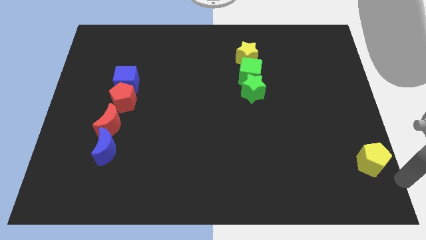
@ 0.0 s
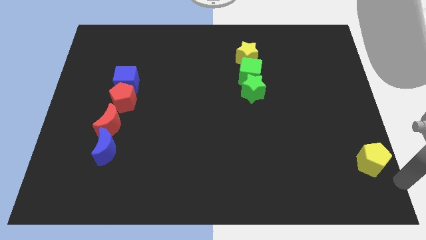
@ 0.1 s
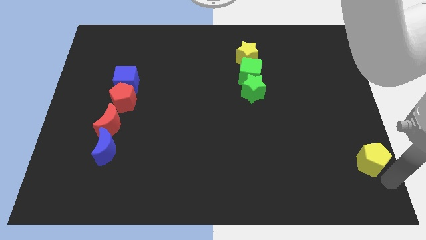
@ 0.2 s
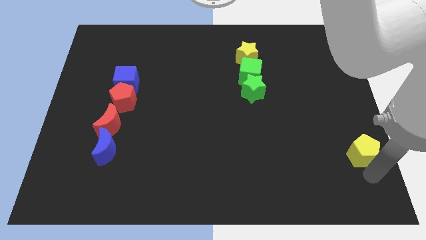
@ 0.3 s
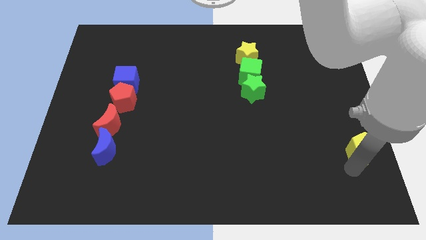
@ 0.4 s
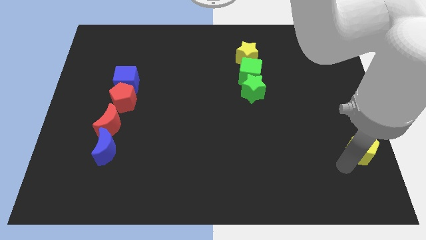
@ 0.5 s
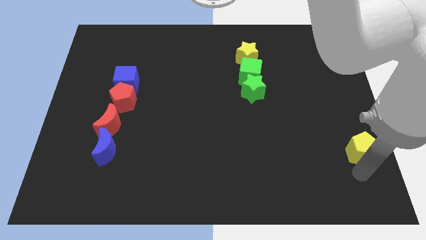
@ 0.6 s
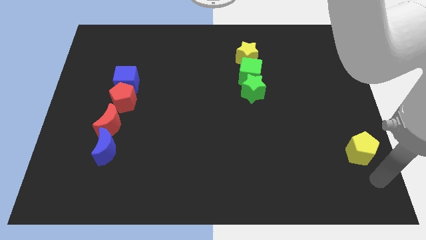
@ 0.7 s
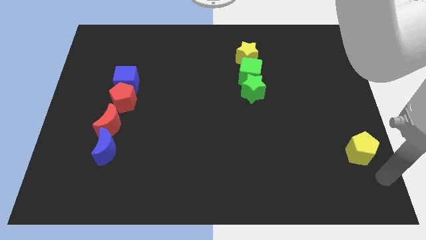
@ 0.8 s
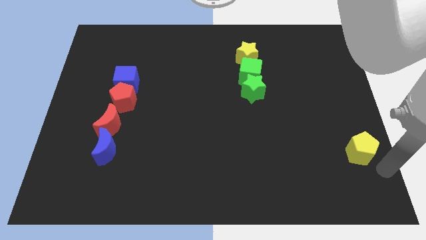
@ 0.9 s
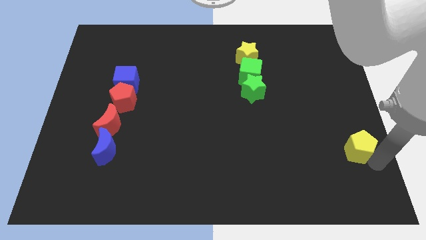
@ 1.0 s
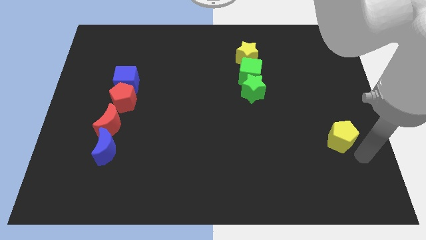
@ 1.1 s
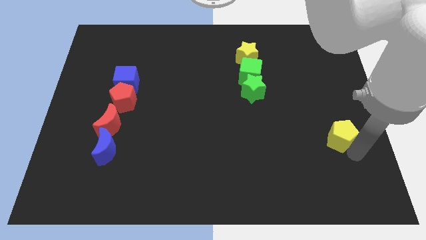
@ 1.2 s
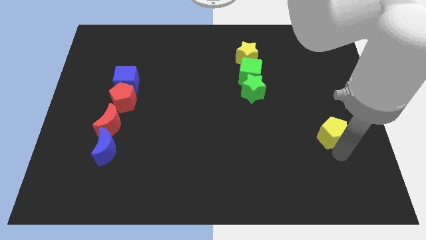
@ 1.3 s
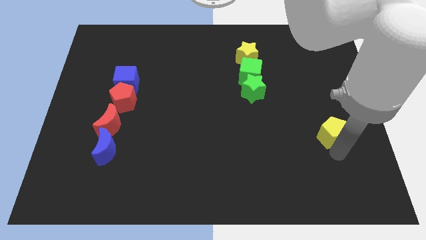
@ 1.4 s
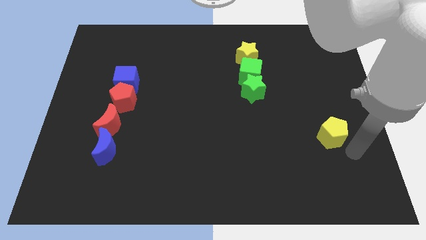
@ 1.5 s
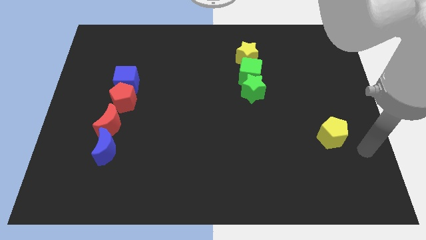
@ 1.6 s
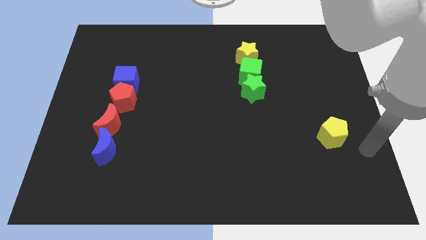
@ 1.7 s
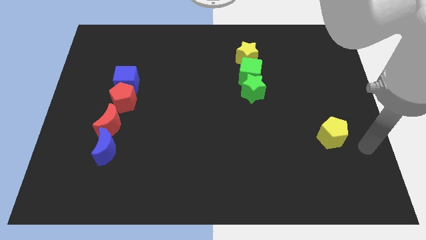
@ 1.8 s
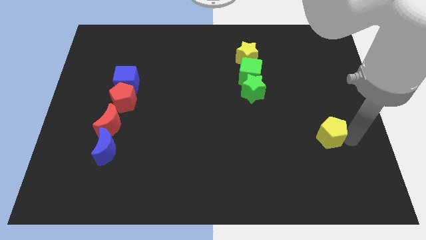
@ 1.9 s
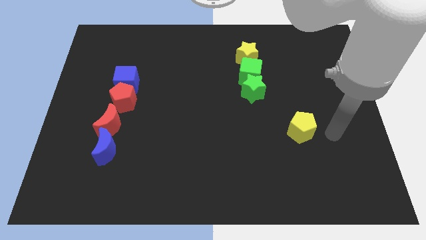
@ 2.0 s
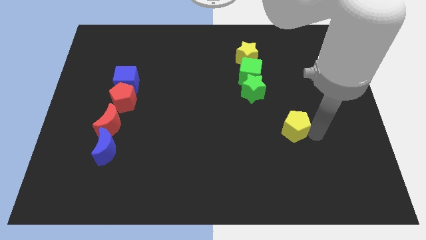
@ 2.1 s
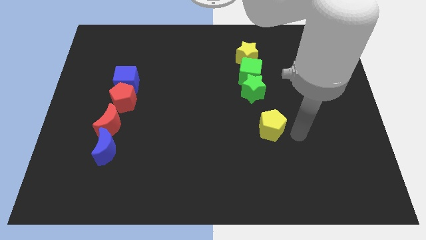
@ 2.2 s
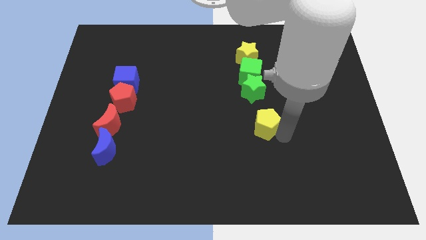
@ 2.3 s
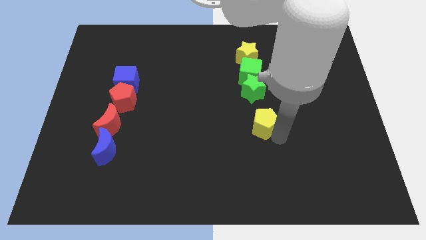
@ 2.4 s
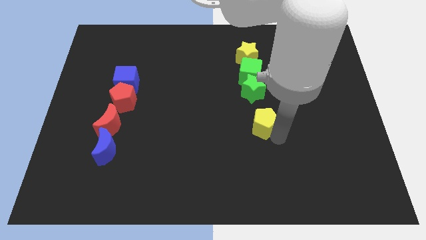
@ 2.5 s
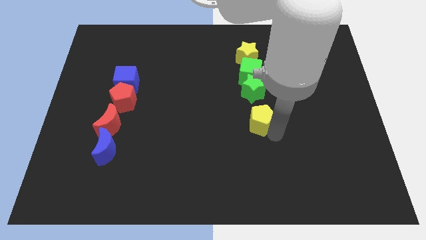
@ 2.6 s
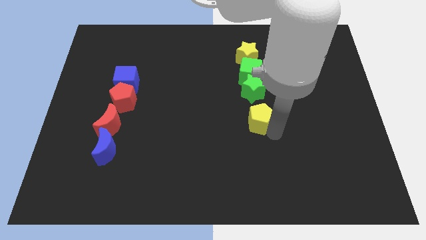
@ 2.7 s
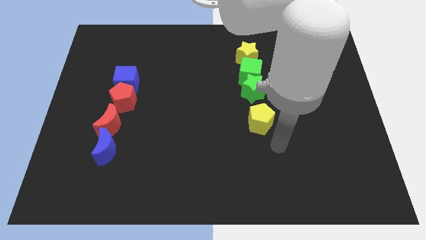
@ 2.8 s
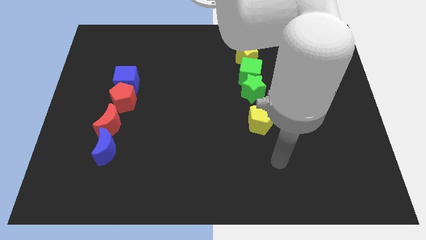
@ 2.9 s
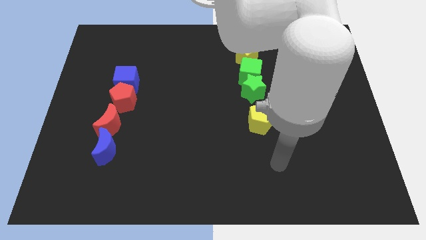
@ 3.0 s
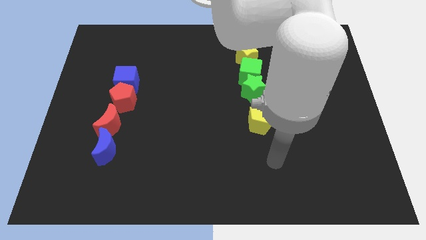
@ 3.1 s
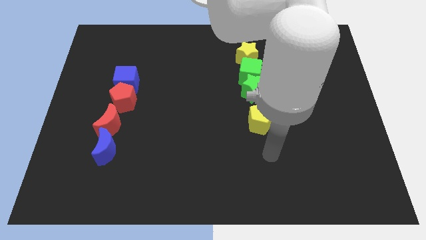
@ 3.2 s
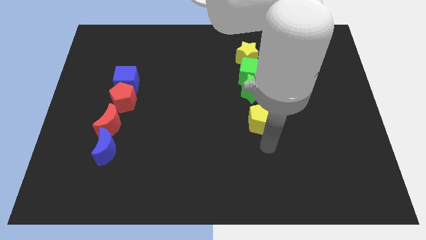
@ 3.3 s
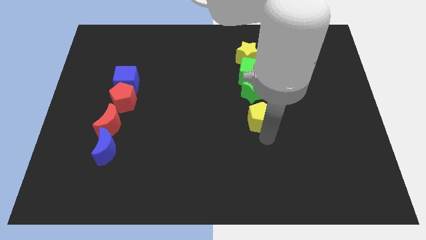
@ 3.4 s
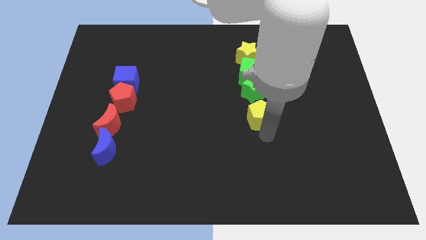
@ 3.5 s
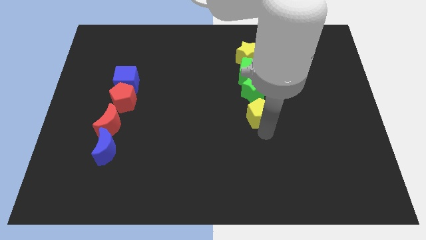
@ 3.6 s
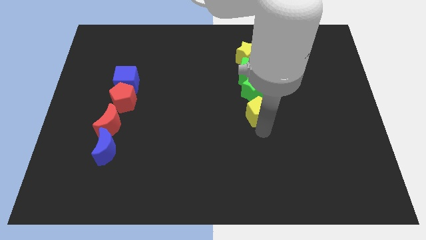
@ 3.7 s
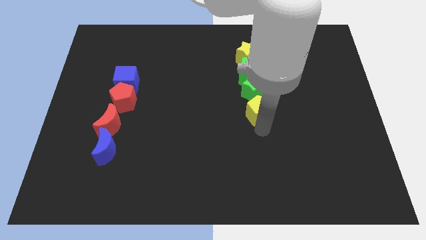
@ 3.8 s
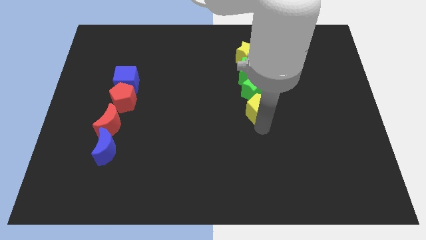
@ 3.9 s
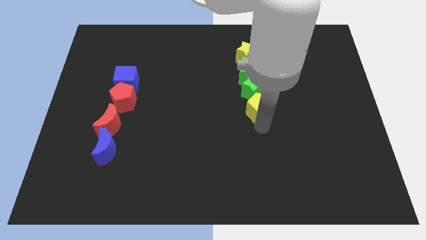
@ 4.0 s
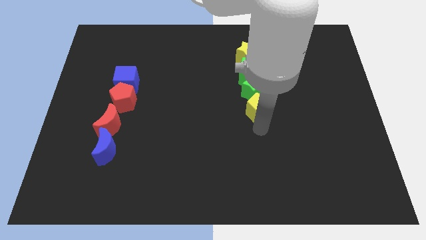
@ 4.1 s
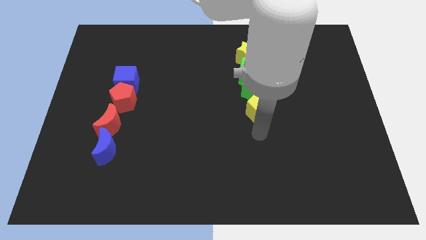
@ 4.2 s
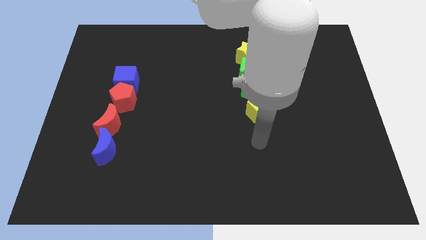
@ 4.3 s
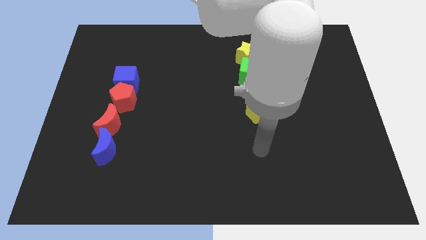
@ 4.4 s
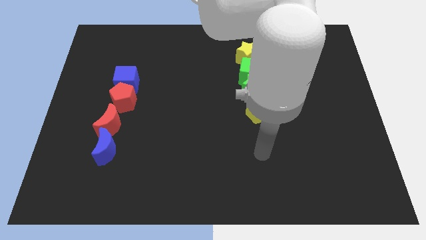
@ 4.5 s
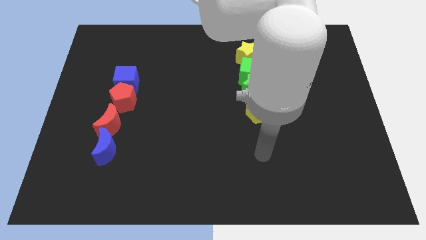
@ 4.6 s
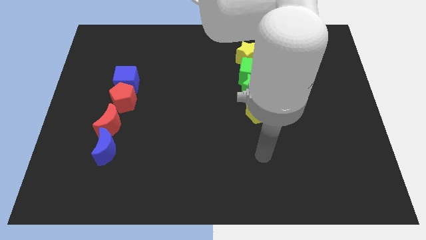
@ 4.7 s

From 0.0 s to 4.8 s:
place the yellow pentagon below the green star

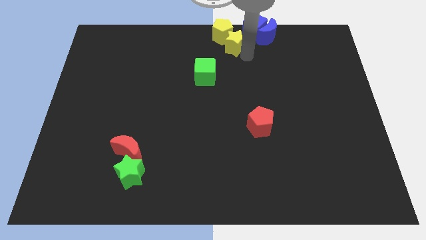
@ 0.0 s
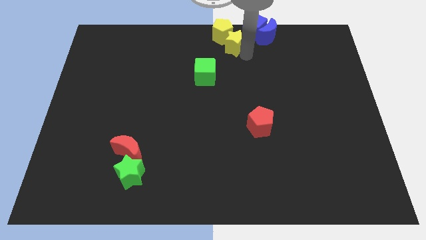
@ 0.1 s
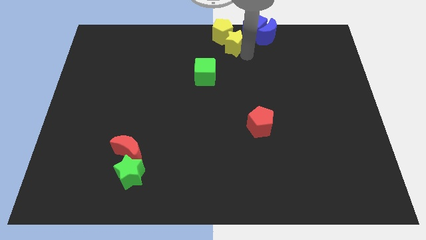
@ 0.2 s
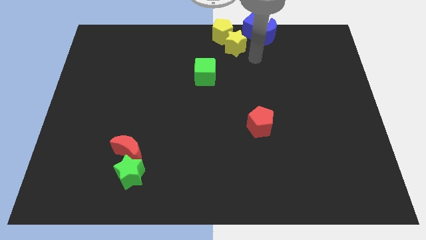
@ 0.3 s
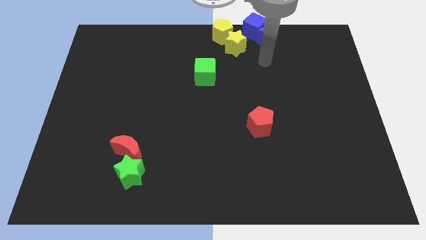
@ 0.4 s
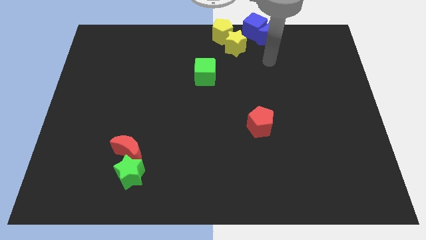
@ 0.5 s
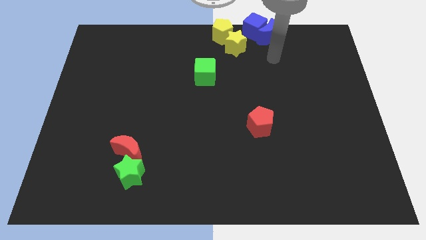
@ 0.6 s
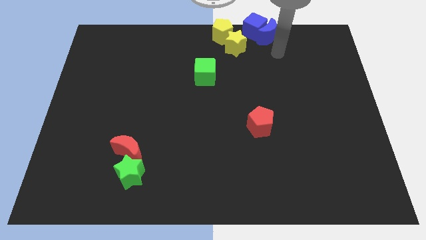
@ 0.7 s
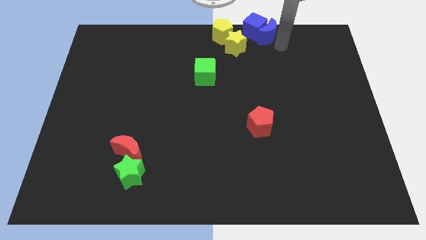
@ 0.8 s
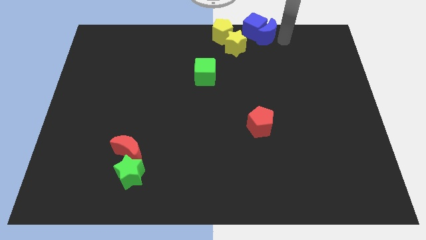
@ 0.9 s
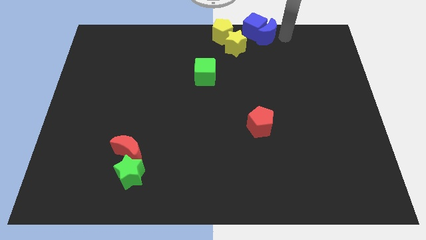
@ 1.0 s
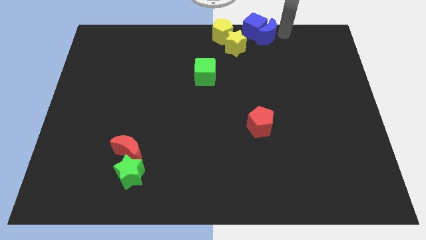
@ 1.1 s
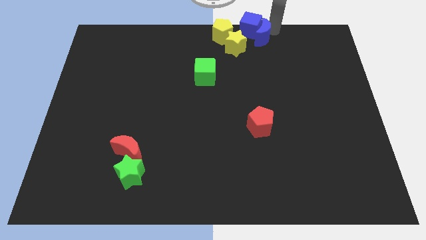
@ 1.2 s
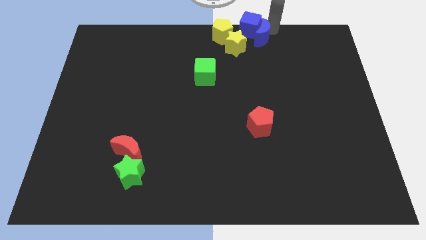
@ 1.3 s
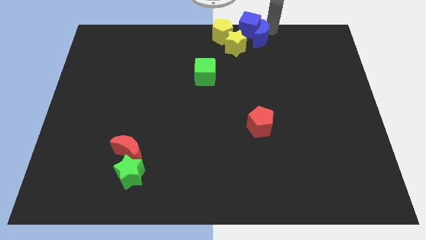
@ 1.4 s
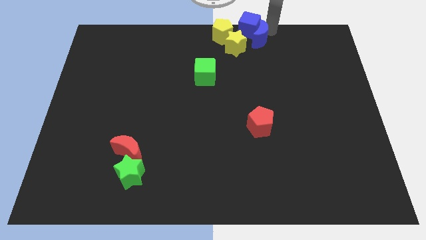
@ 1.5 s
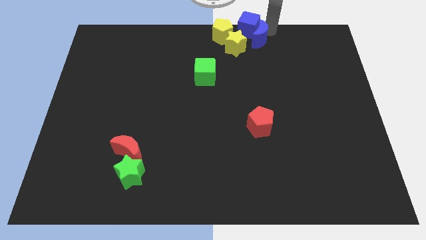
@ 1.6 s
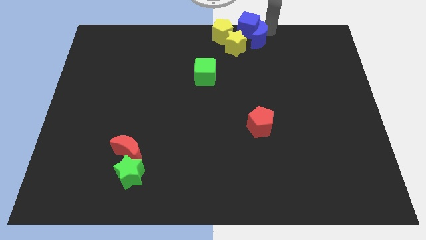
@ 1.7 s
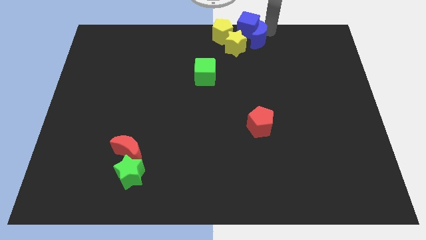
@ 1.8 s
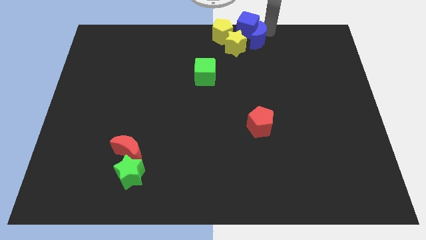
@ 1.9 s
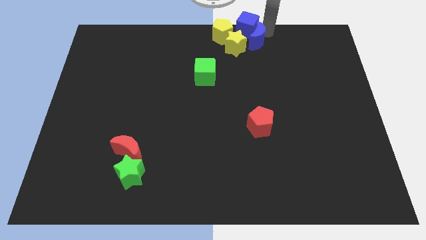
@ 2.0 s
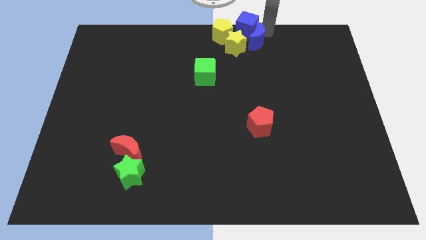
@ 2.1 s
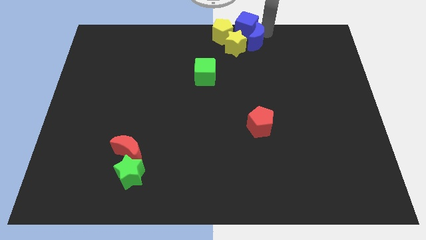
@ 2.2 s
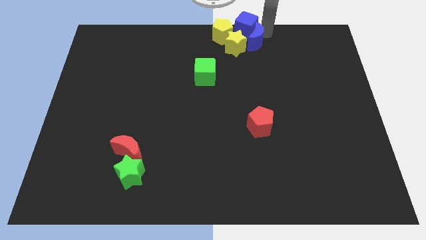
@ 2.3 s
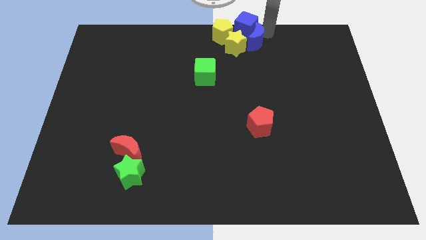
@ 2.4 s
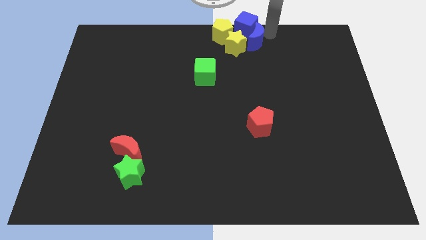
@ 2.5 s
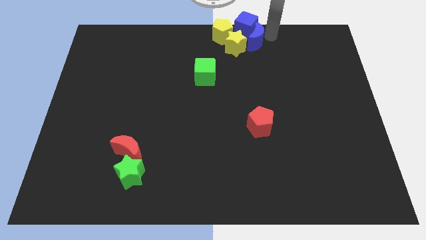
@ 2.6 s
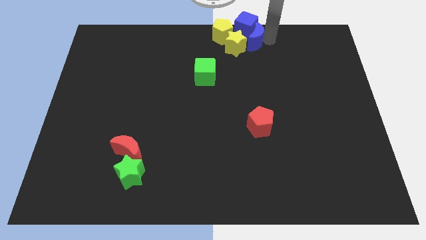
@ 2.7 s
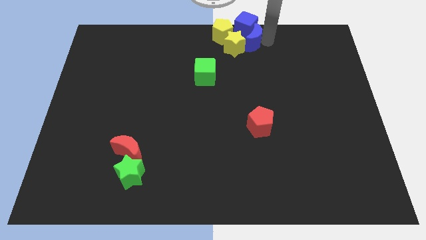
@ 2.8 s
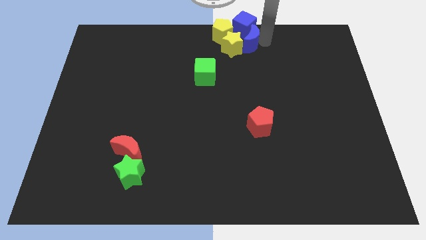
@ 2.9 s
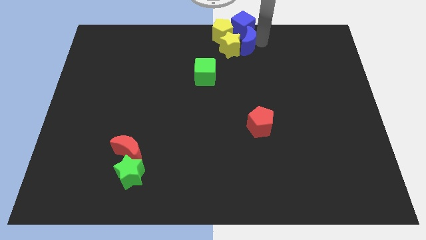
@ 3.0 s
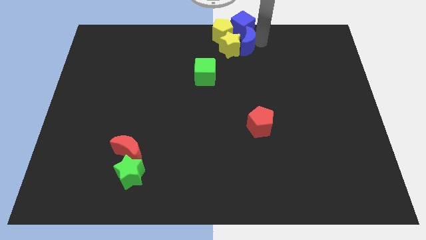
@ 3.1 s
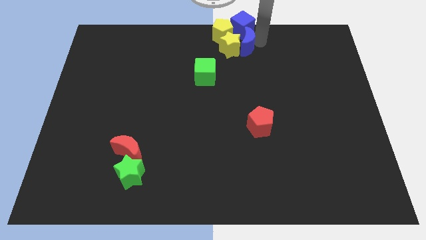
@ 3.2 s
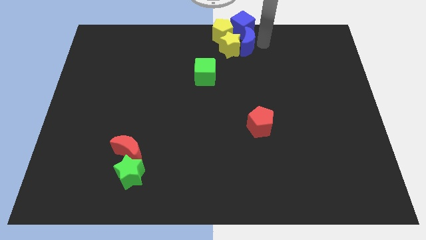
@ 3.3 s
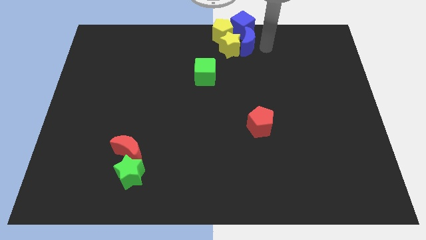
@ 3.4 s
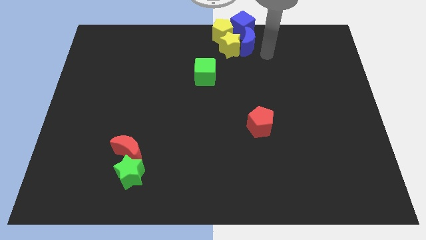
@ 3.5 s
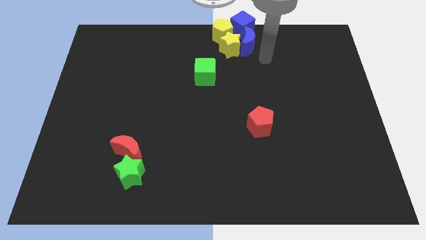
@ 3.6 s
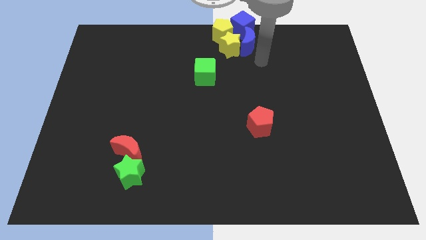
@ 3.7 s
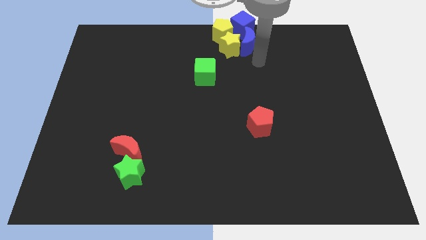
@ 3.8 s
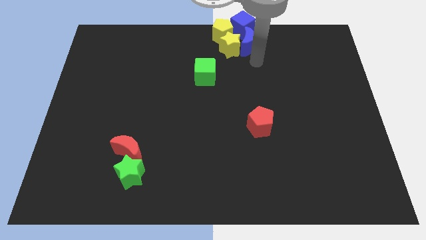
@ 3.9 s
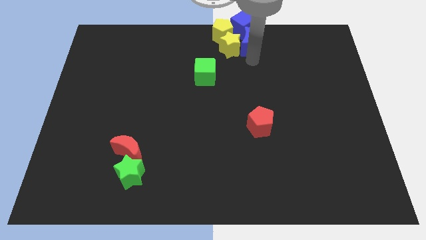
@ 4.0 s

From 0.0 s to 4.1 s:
move blue blocks to the right of the yellow blocks

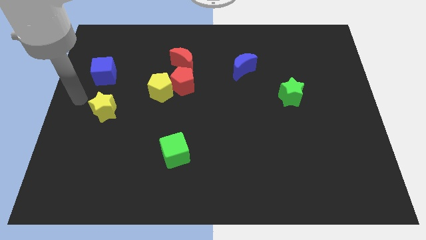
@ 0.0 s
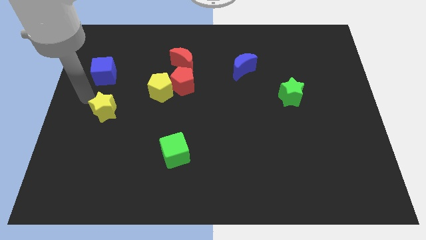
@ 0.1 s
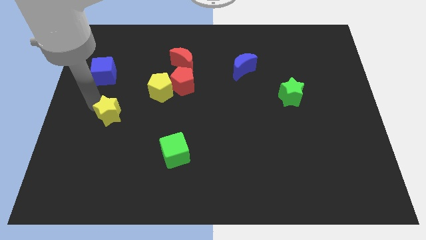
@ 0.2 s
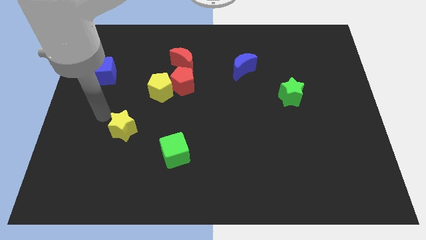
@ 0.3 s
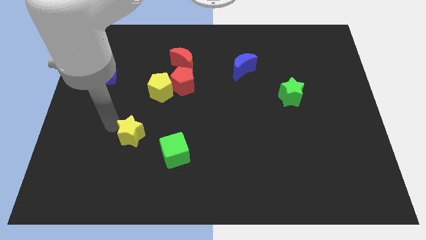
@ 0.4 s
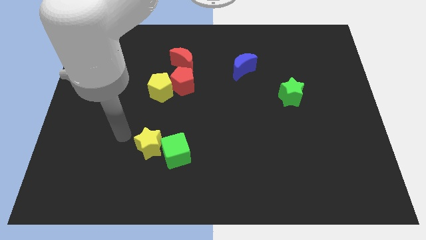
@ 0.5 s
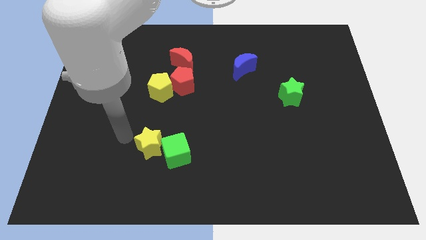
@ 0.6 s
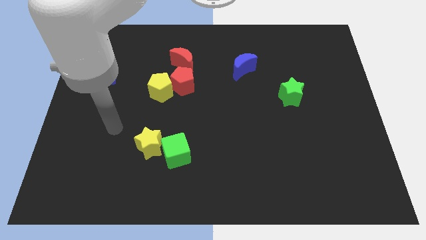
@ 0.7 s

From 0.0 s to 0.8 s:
push the yellow star into the green cube
